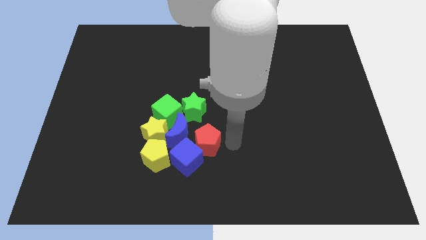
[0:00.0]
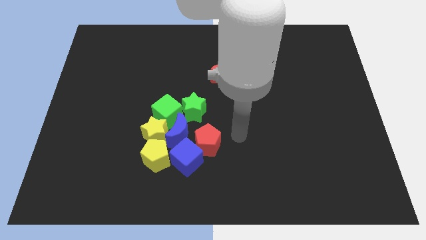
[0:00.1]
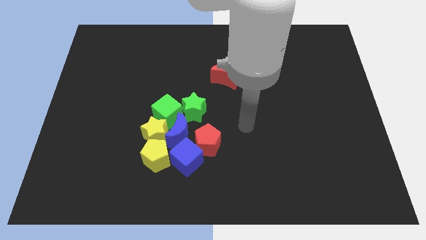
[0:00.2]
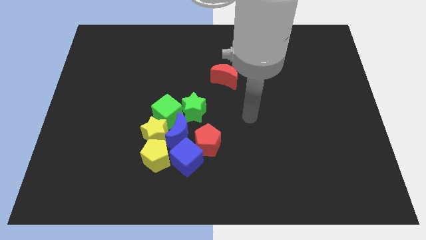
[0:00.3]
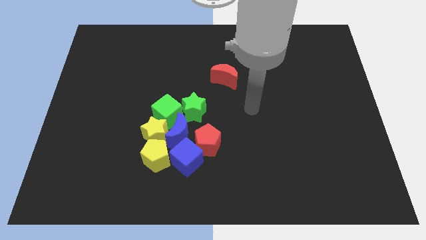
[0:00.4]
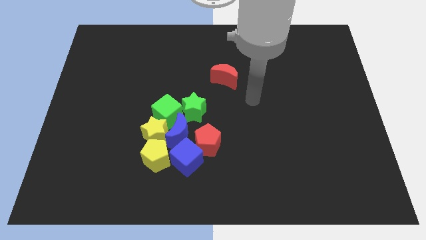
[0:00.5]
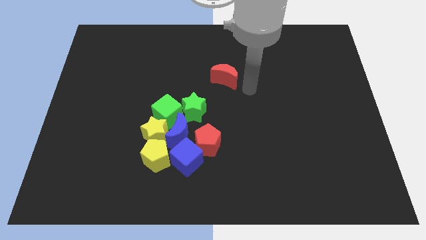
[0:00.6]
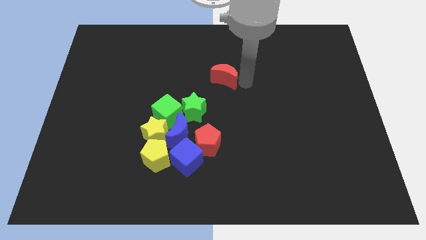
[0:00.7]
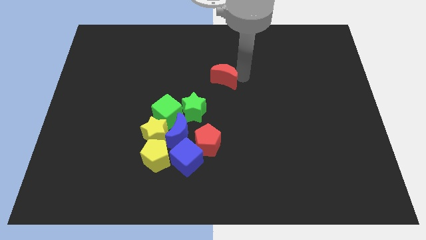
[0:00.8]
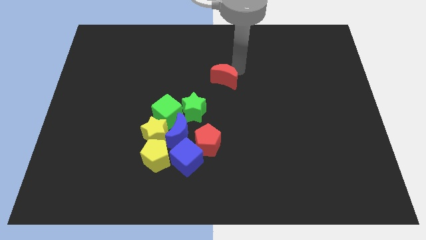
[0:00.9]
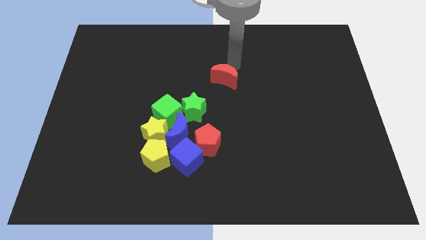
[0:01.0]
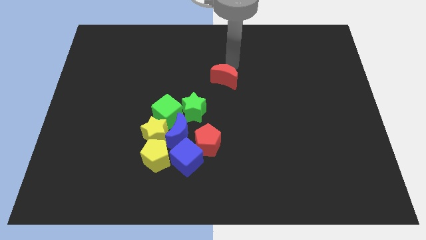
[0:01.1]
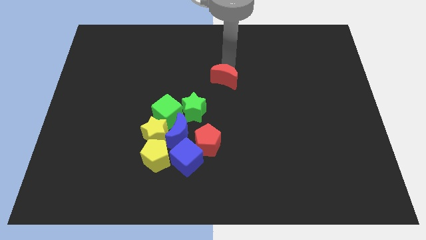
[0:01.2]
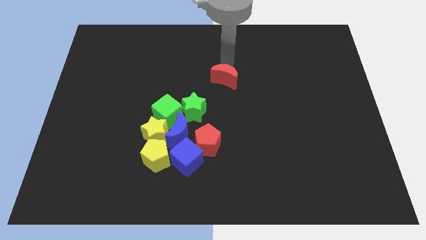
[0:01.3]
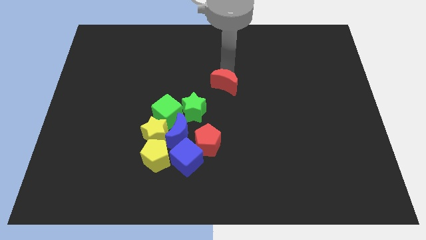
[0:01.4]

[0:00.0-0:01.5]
move the arm towards the top of red crescent

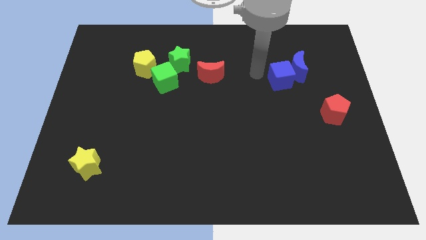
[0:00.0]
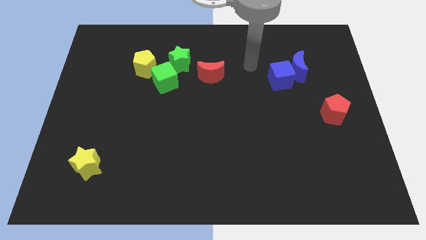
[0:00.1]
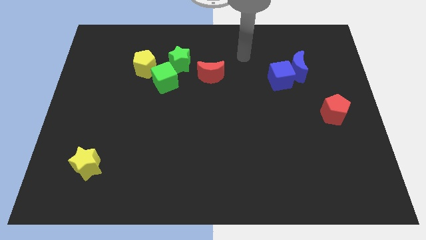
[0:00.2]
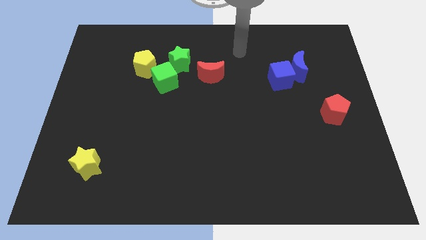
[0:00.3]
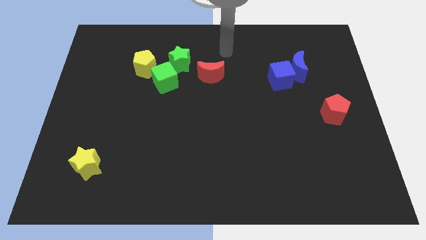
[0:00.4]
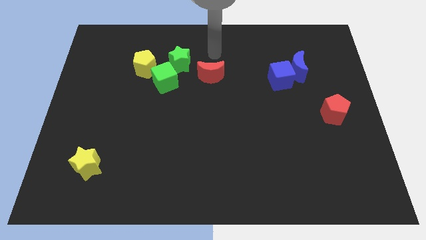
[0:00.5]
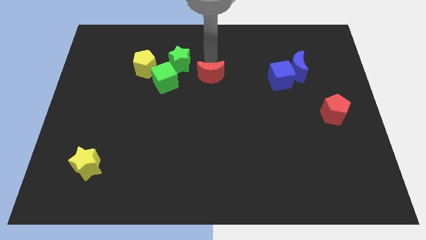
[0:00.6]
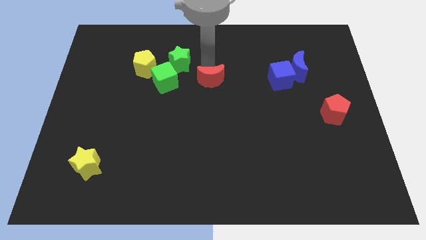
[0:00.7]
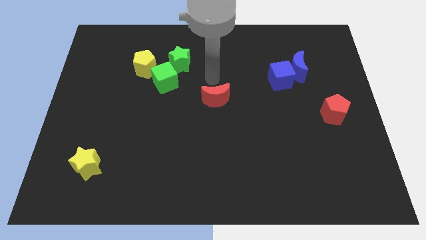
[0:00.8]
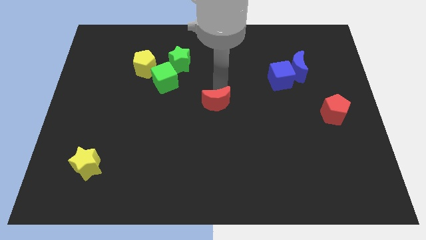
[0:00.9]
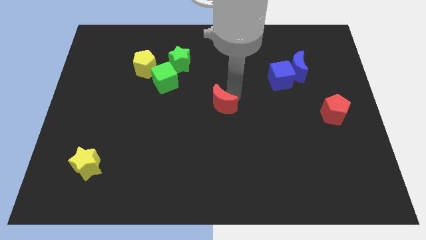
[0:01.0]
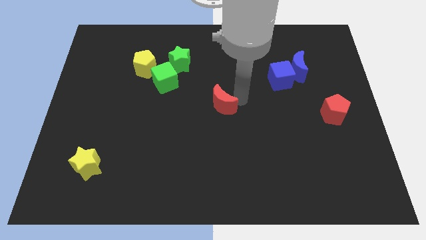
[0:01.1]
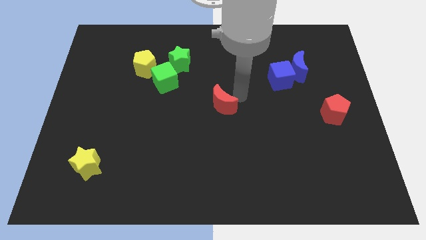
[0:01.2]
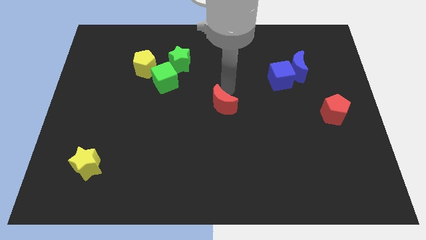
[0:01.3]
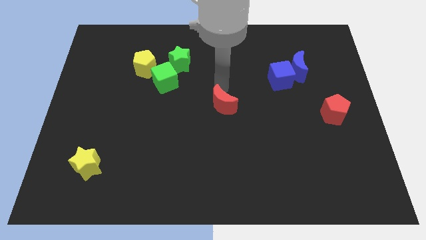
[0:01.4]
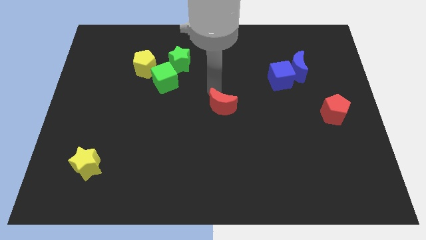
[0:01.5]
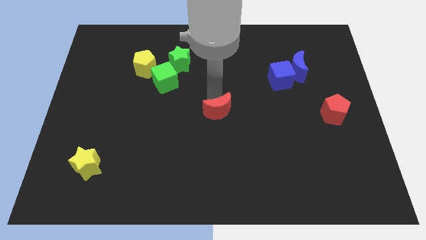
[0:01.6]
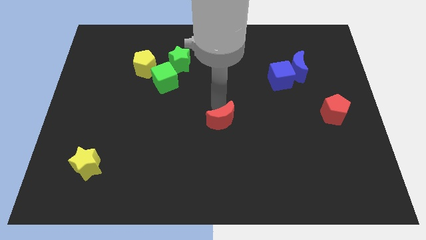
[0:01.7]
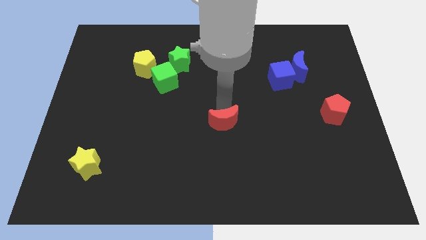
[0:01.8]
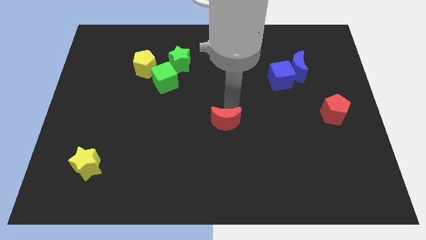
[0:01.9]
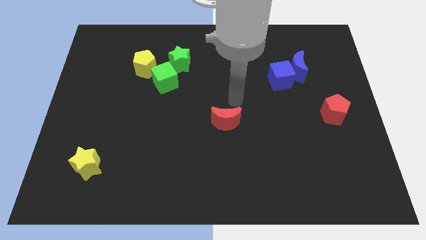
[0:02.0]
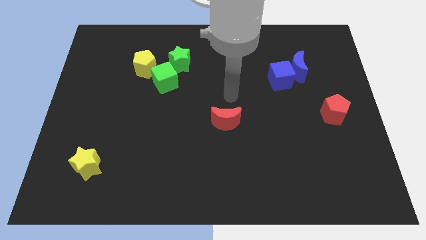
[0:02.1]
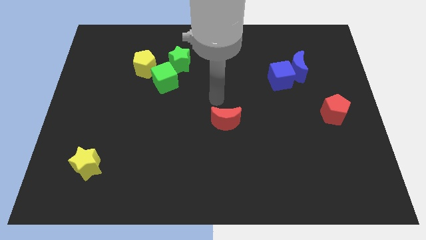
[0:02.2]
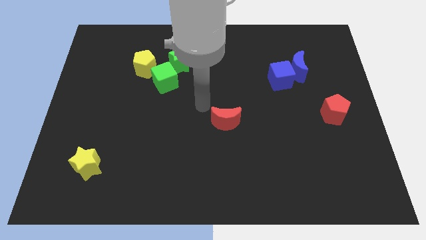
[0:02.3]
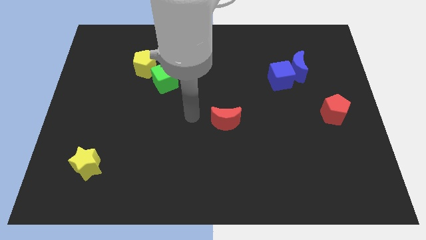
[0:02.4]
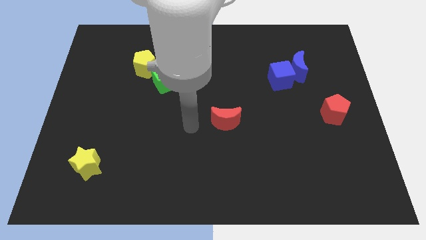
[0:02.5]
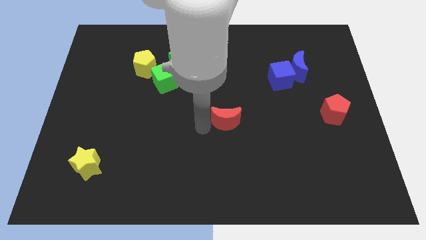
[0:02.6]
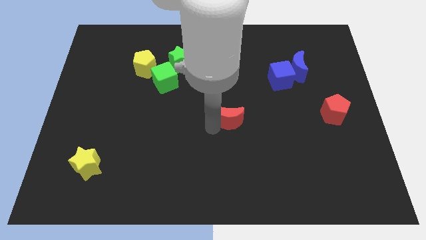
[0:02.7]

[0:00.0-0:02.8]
place the red moon at the center of the board

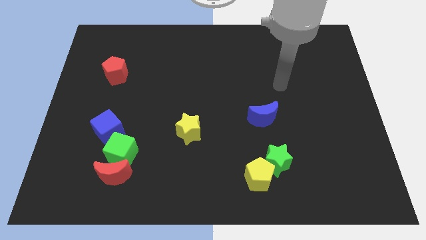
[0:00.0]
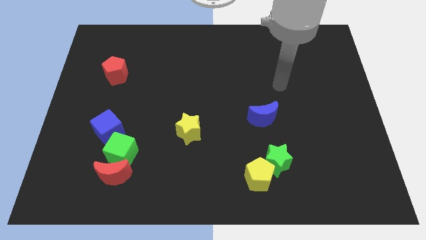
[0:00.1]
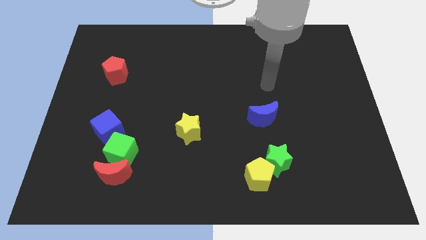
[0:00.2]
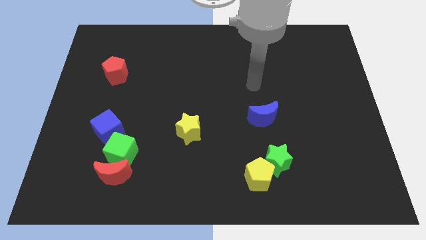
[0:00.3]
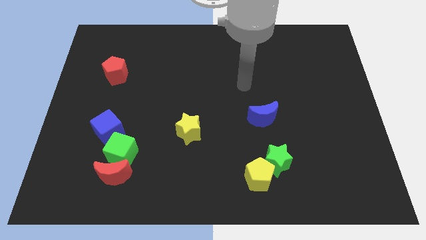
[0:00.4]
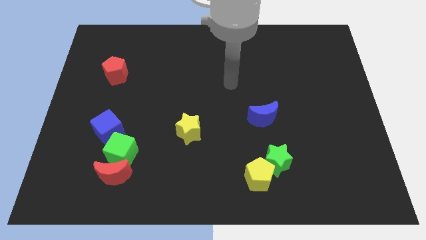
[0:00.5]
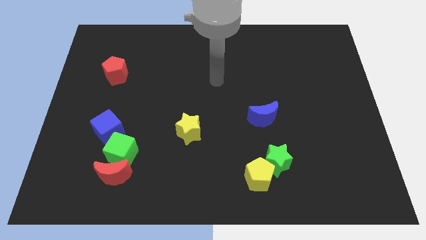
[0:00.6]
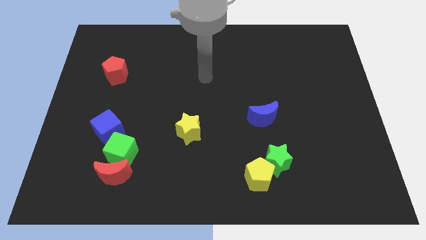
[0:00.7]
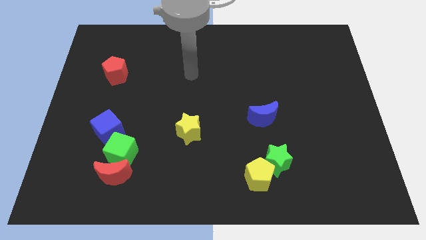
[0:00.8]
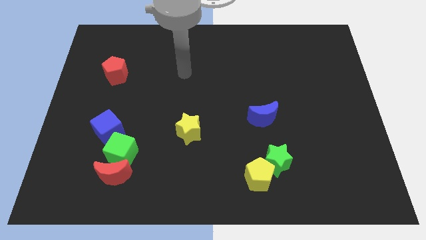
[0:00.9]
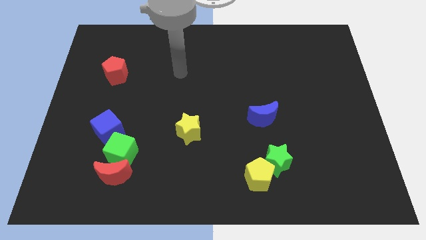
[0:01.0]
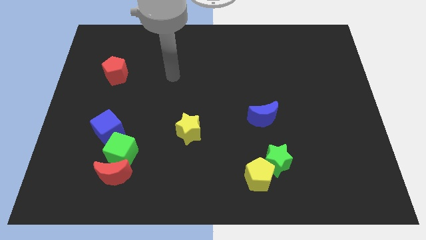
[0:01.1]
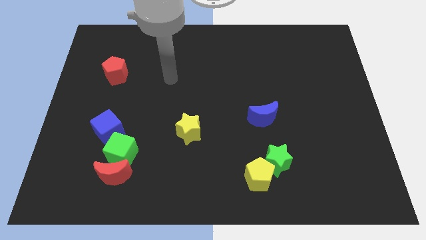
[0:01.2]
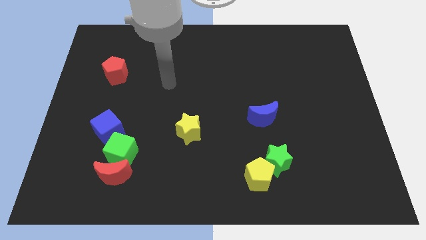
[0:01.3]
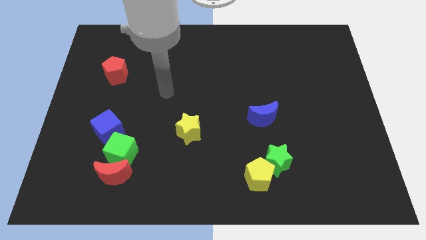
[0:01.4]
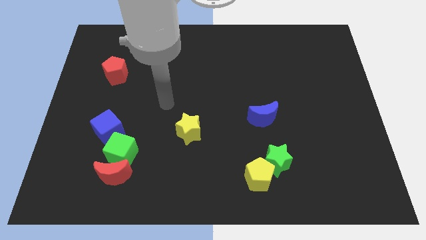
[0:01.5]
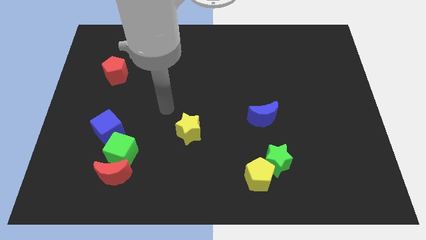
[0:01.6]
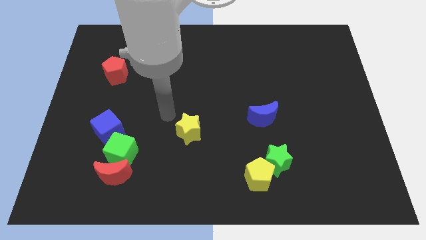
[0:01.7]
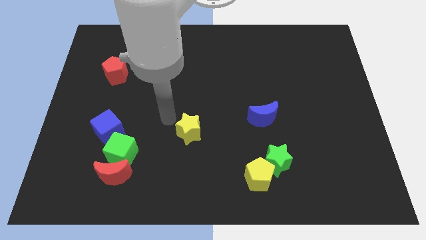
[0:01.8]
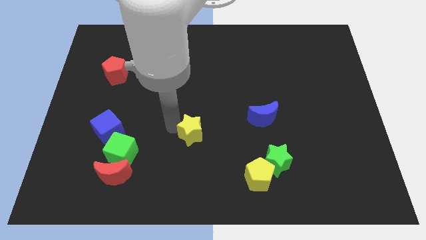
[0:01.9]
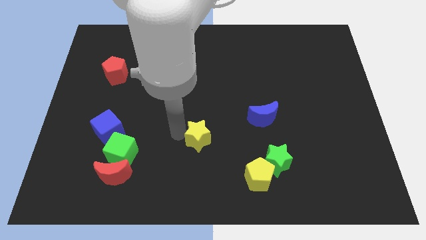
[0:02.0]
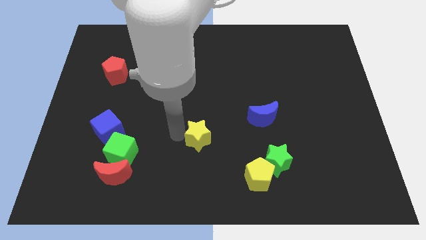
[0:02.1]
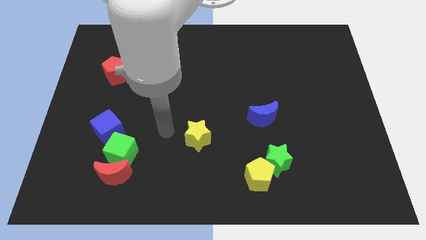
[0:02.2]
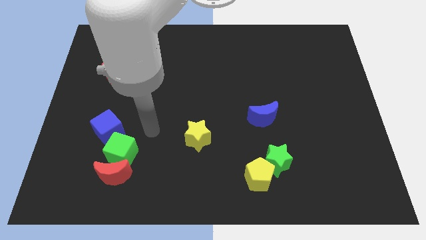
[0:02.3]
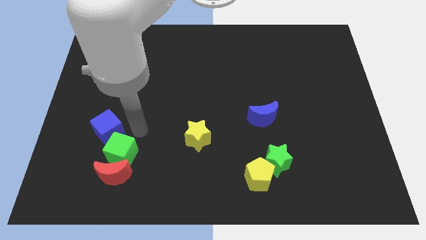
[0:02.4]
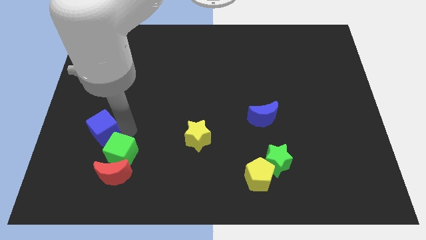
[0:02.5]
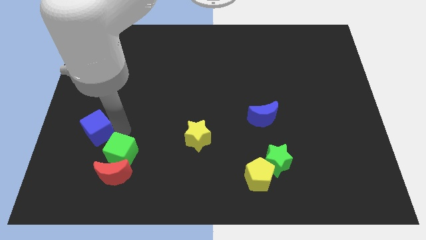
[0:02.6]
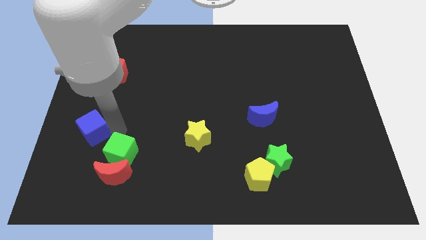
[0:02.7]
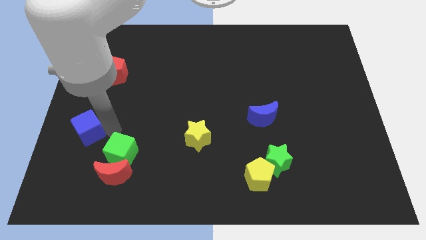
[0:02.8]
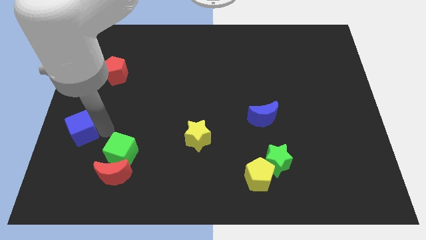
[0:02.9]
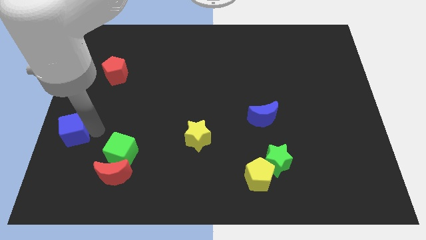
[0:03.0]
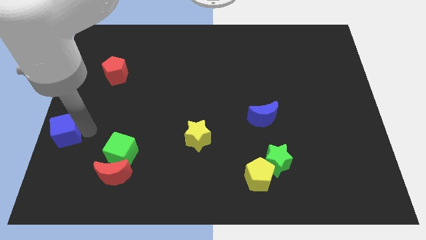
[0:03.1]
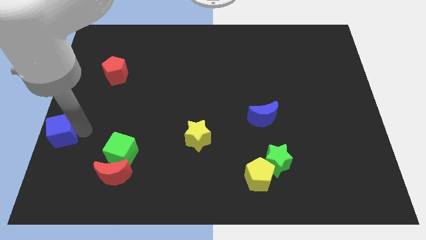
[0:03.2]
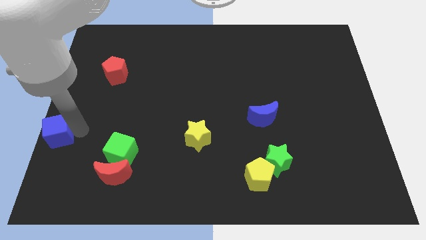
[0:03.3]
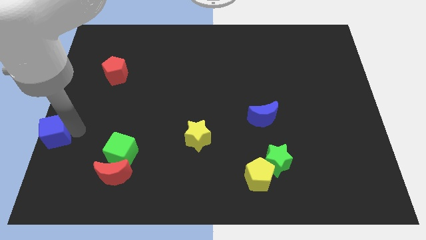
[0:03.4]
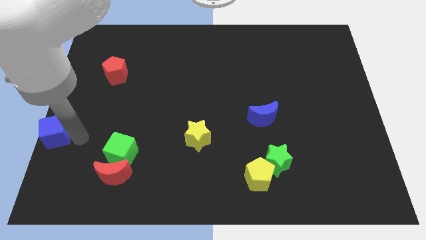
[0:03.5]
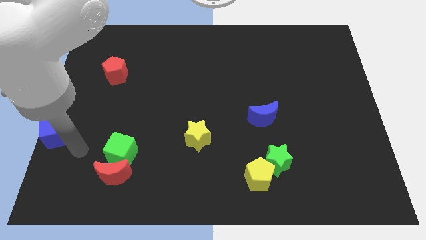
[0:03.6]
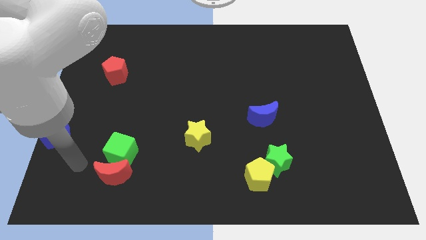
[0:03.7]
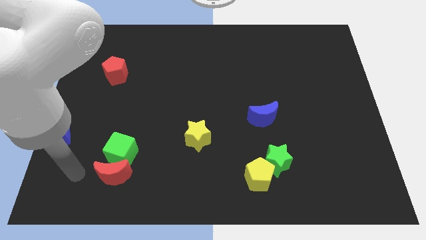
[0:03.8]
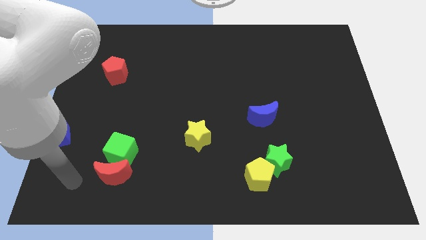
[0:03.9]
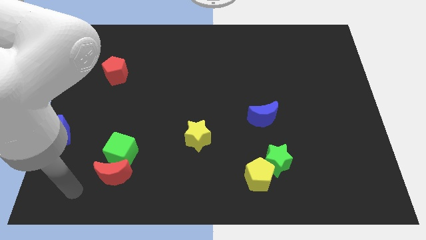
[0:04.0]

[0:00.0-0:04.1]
slide the yellow star diagonally to the yellow pentagon

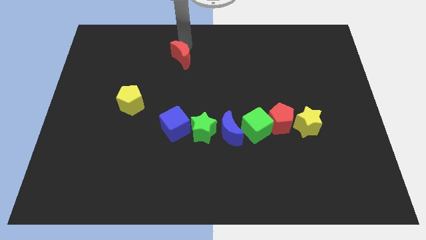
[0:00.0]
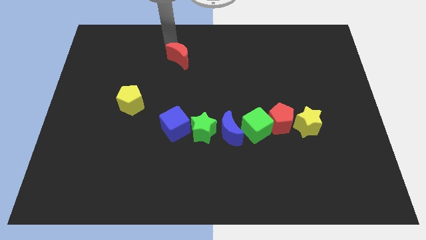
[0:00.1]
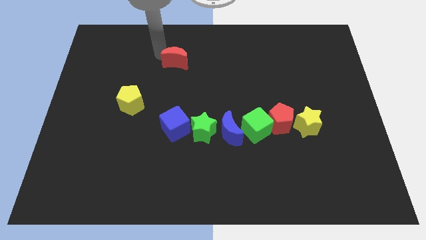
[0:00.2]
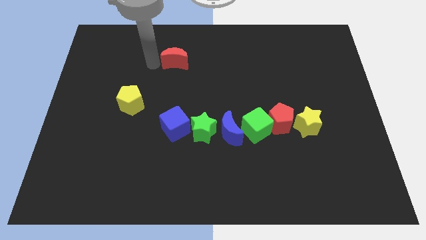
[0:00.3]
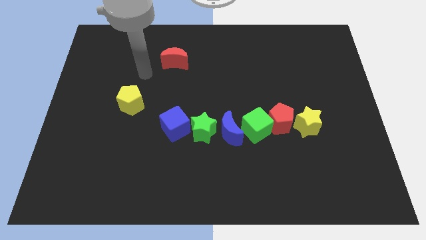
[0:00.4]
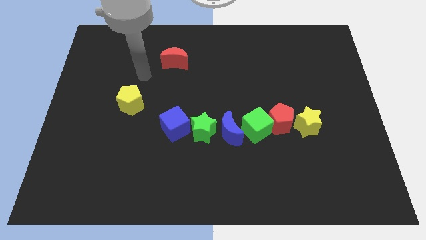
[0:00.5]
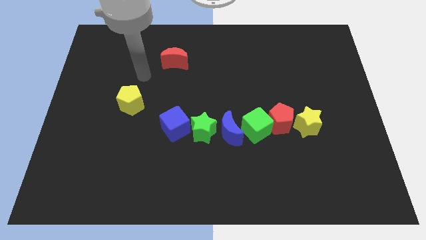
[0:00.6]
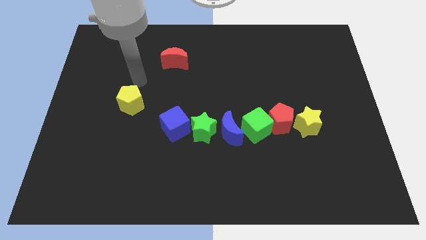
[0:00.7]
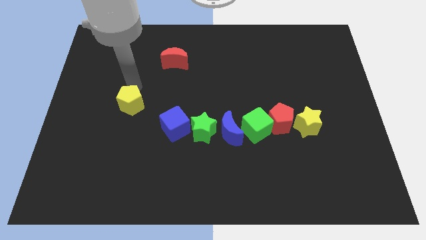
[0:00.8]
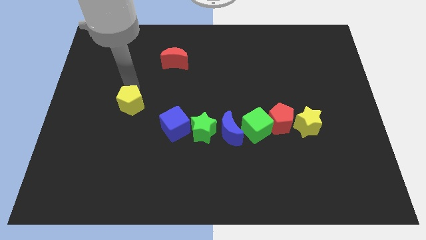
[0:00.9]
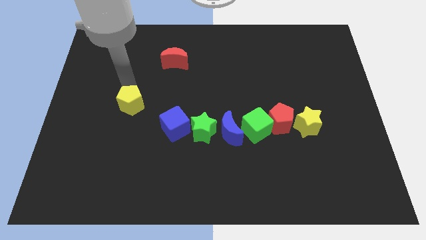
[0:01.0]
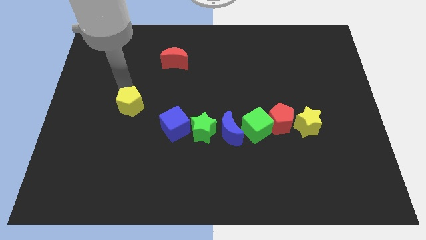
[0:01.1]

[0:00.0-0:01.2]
move the top red crescent slightly
